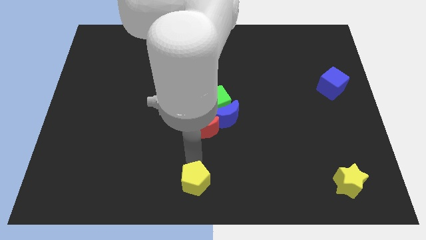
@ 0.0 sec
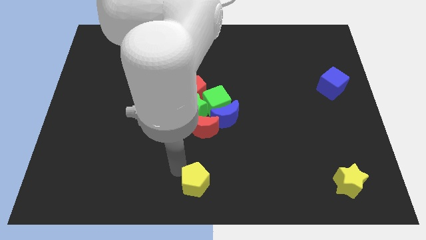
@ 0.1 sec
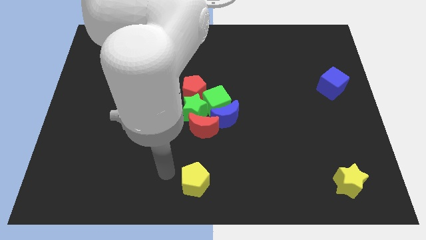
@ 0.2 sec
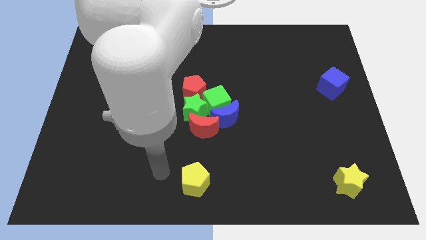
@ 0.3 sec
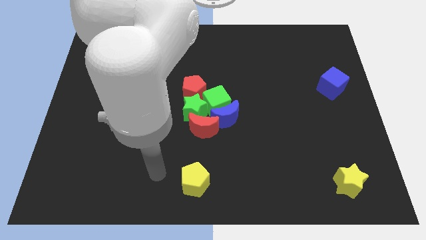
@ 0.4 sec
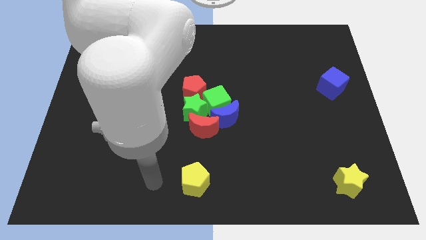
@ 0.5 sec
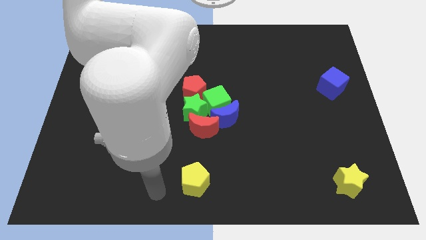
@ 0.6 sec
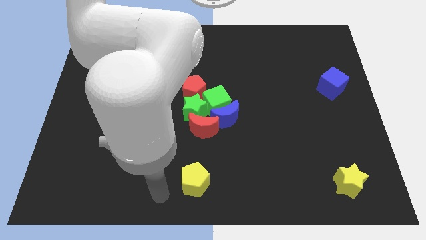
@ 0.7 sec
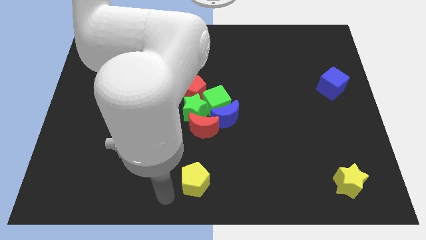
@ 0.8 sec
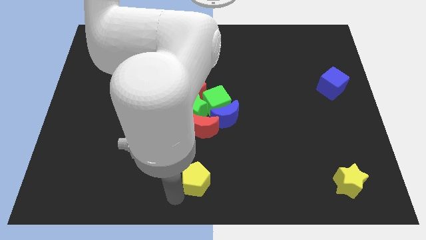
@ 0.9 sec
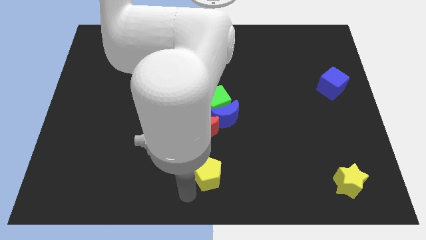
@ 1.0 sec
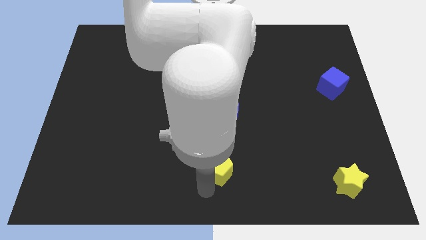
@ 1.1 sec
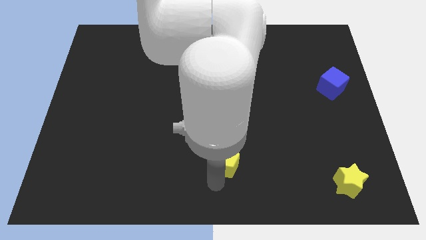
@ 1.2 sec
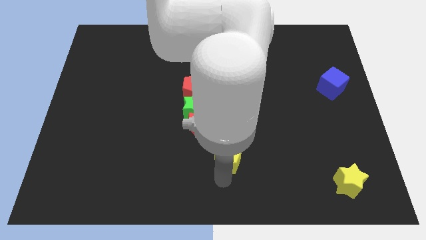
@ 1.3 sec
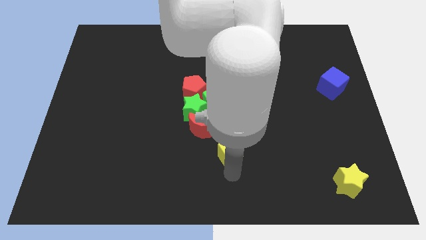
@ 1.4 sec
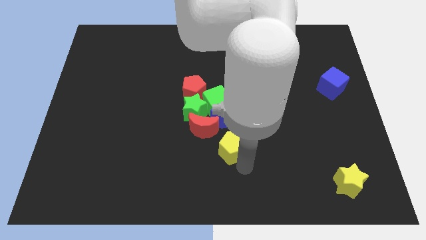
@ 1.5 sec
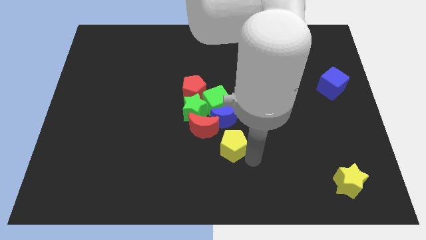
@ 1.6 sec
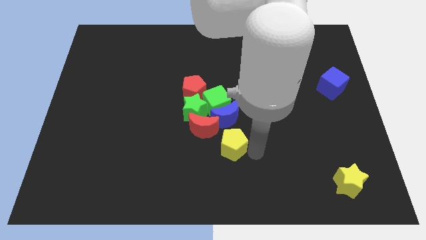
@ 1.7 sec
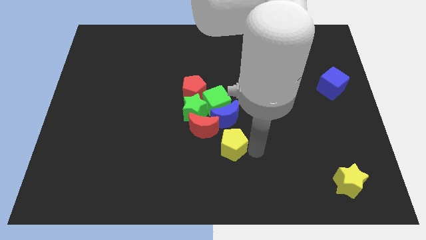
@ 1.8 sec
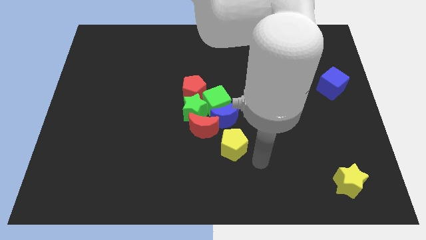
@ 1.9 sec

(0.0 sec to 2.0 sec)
push the yellow pentagon towards red crescent

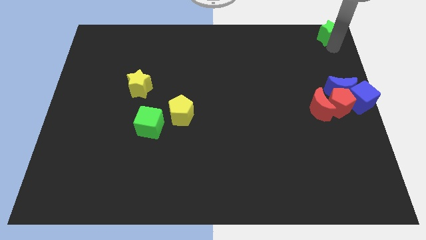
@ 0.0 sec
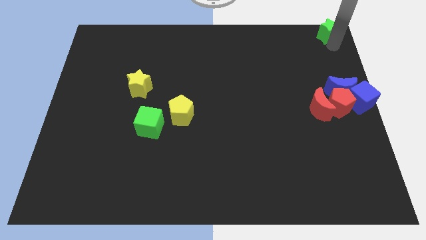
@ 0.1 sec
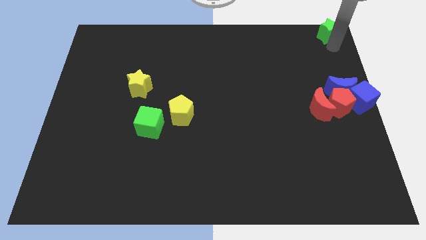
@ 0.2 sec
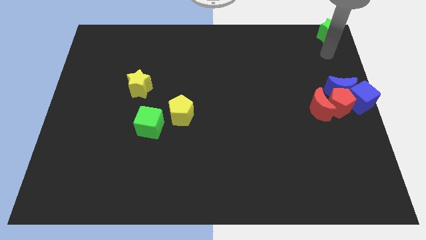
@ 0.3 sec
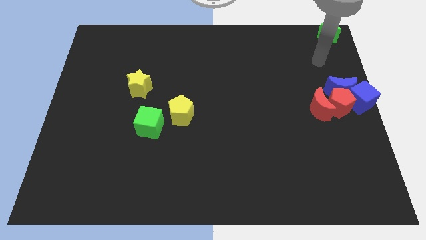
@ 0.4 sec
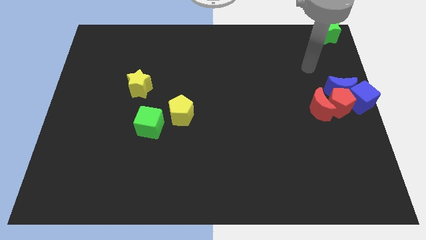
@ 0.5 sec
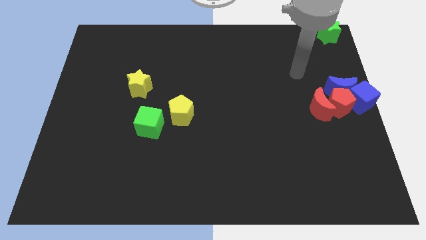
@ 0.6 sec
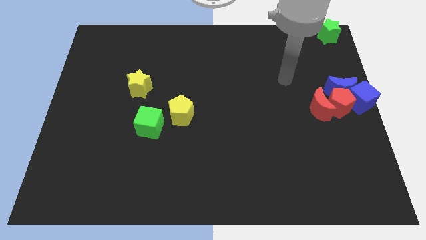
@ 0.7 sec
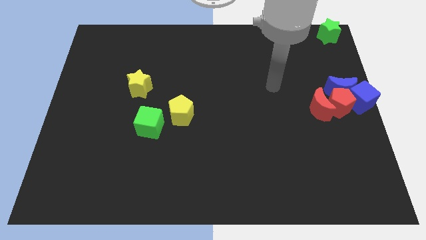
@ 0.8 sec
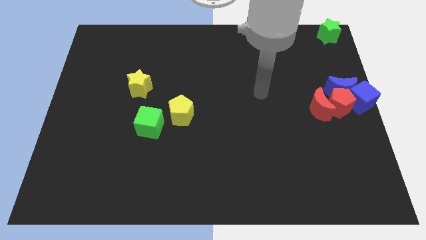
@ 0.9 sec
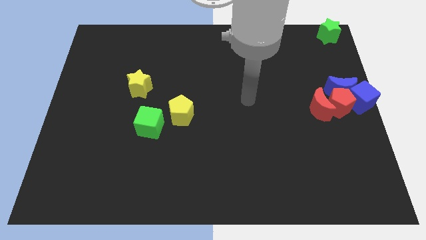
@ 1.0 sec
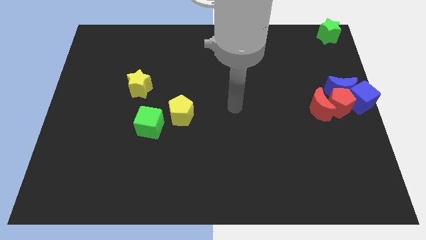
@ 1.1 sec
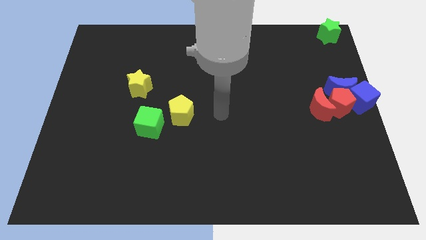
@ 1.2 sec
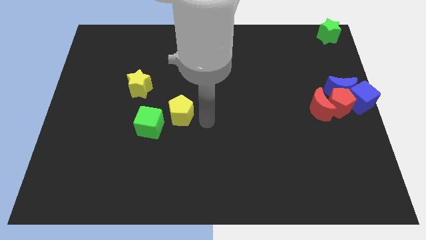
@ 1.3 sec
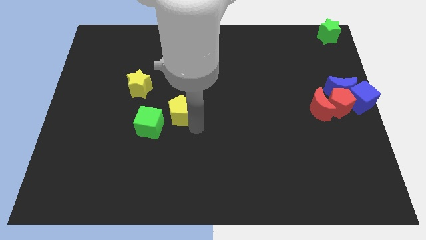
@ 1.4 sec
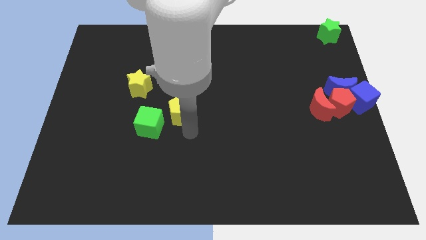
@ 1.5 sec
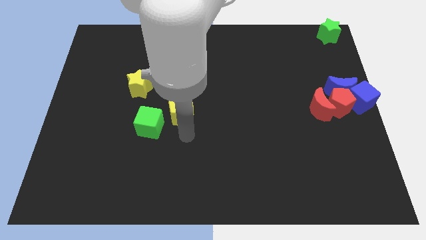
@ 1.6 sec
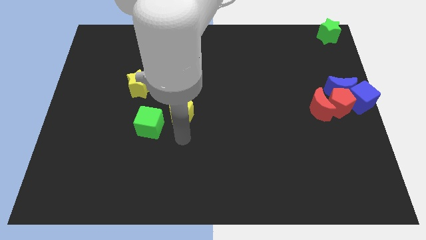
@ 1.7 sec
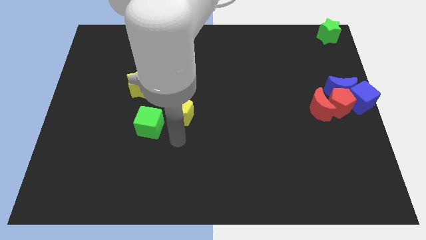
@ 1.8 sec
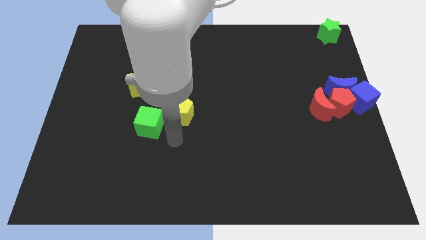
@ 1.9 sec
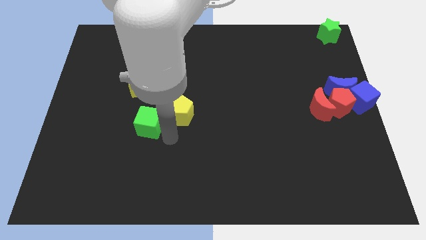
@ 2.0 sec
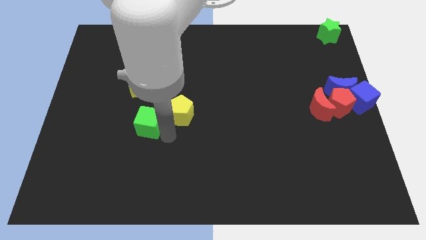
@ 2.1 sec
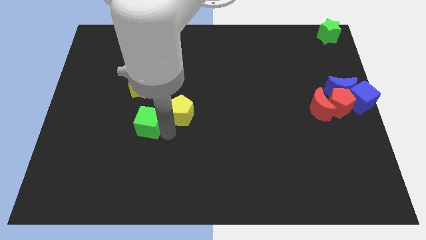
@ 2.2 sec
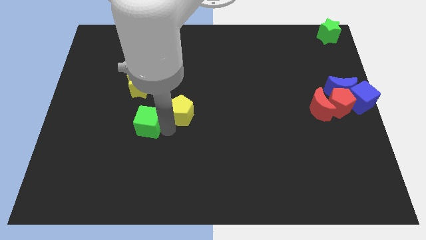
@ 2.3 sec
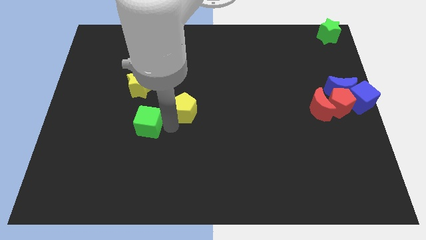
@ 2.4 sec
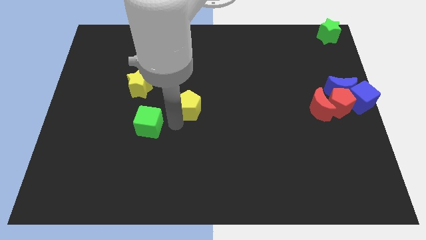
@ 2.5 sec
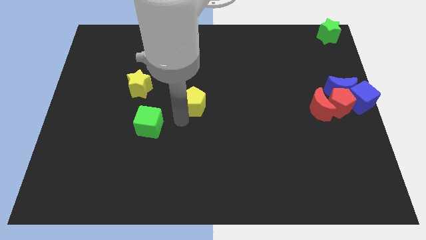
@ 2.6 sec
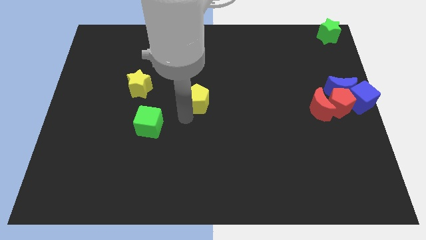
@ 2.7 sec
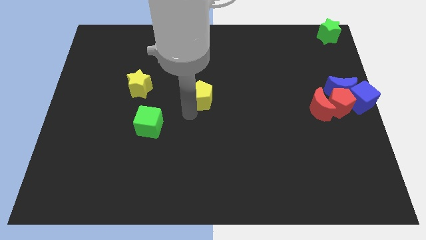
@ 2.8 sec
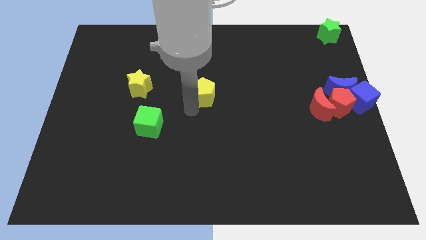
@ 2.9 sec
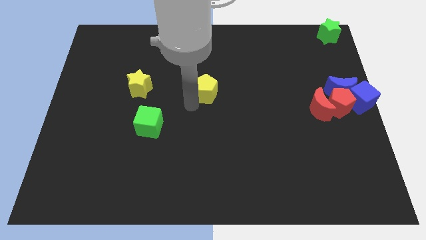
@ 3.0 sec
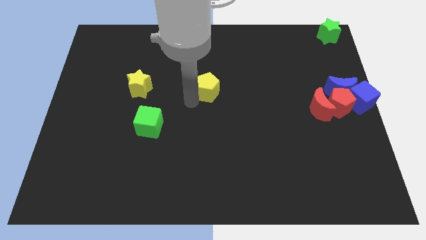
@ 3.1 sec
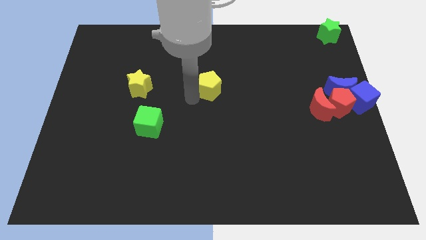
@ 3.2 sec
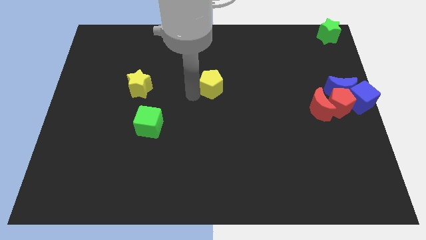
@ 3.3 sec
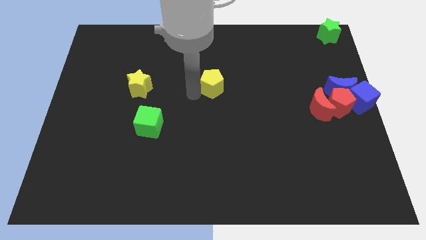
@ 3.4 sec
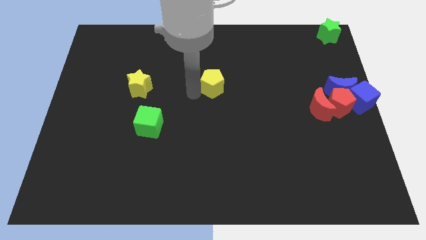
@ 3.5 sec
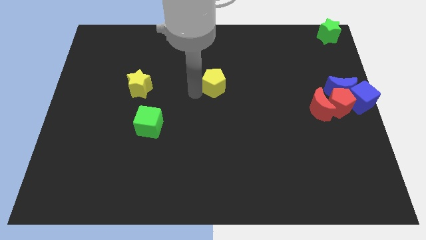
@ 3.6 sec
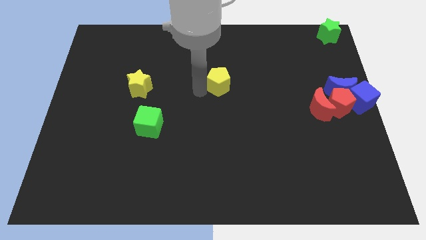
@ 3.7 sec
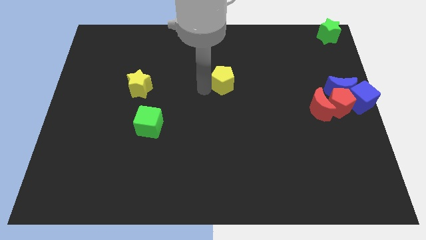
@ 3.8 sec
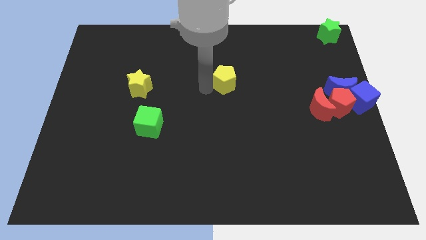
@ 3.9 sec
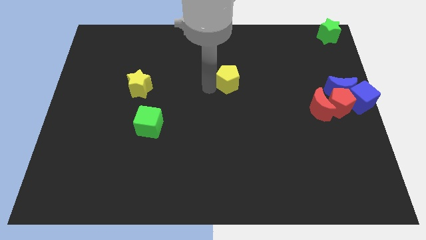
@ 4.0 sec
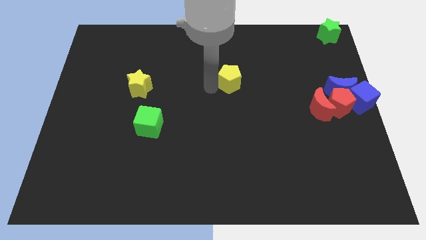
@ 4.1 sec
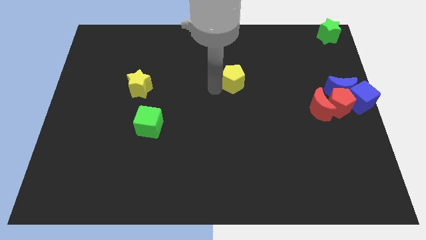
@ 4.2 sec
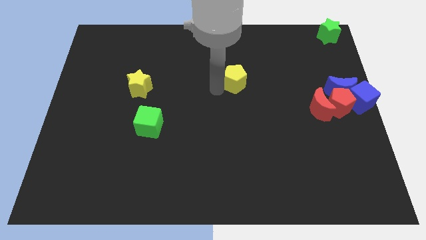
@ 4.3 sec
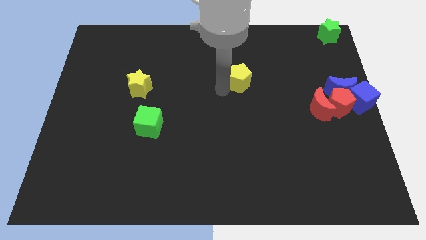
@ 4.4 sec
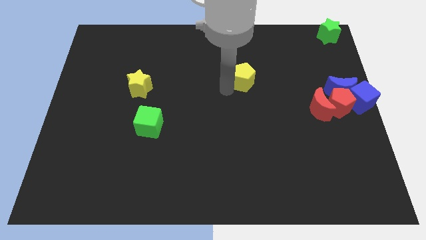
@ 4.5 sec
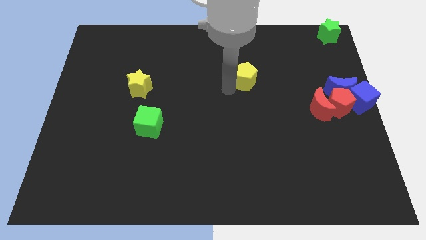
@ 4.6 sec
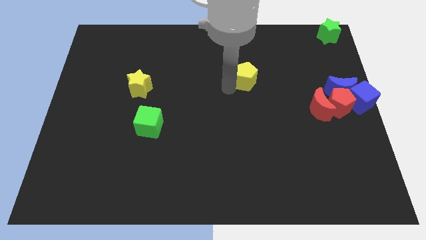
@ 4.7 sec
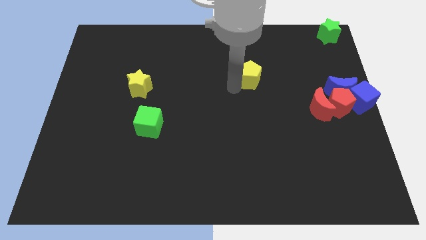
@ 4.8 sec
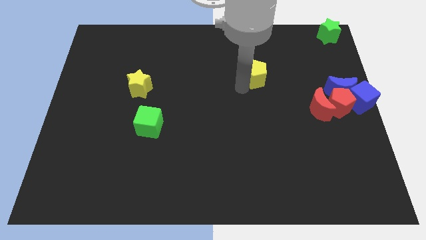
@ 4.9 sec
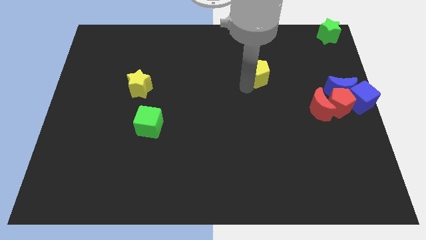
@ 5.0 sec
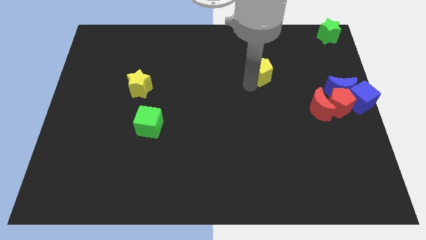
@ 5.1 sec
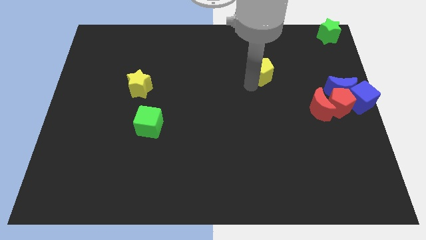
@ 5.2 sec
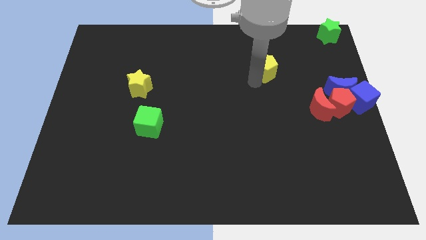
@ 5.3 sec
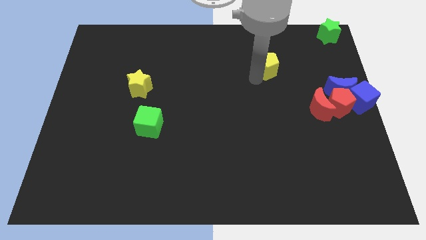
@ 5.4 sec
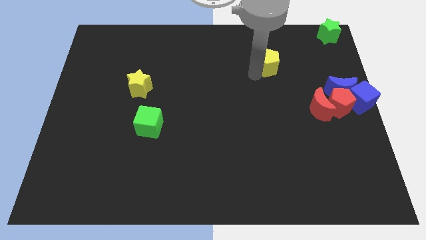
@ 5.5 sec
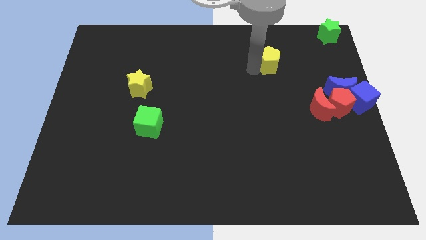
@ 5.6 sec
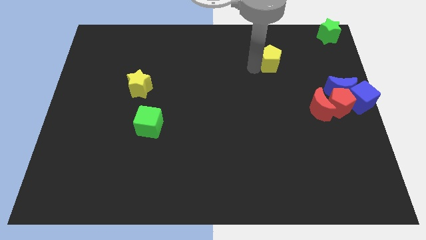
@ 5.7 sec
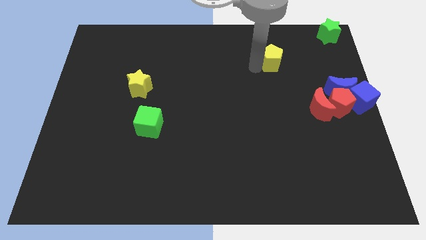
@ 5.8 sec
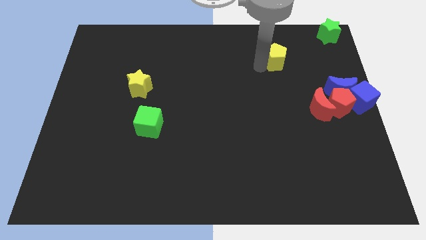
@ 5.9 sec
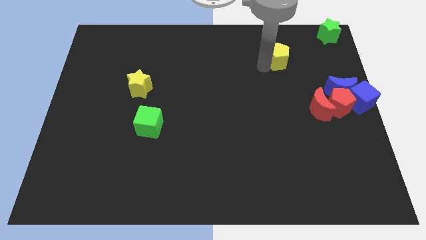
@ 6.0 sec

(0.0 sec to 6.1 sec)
move the yellow pentagon towards the top right of the board

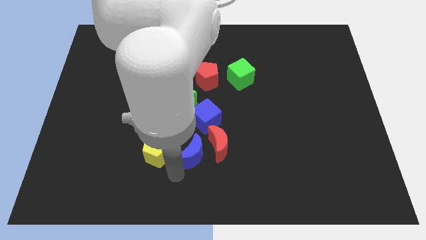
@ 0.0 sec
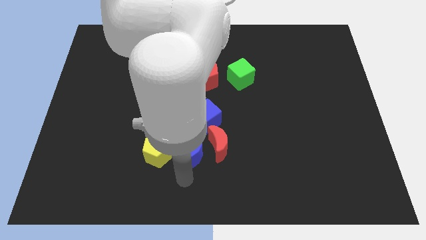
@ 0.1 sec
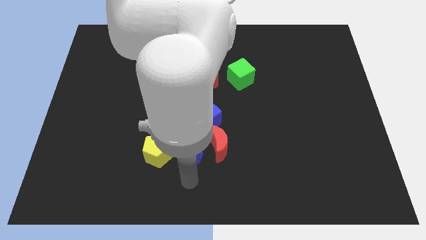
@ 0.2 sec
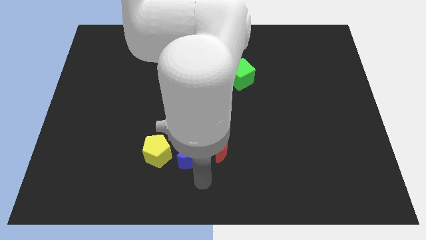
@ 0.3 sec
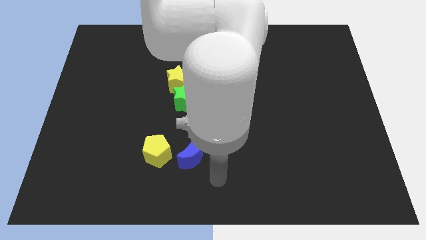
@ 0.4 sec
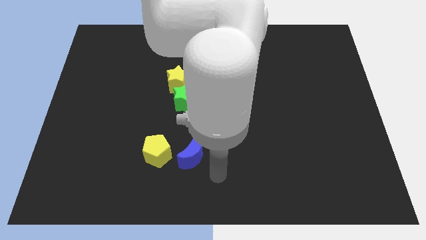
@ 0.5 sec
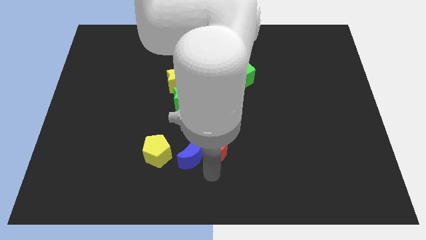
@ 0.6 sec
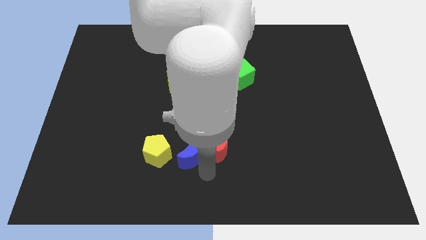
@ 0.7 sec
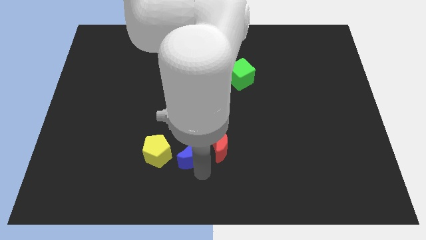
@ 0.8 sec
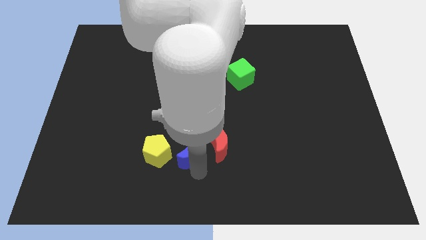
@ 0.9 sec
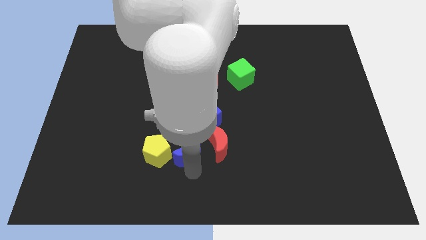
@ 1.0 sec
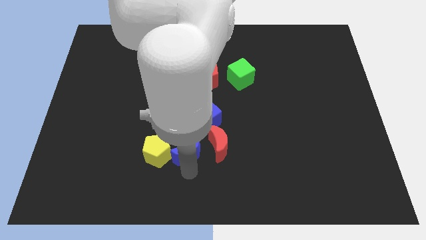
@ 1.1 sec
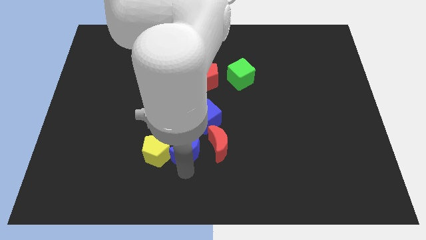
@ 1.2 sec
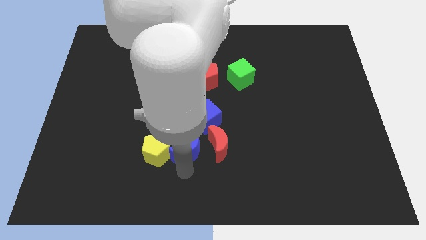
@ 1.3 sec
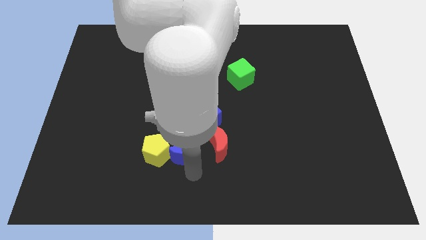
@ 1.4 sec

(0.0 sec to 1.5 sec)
place the blue moon right to the yellow pentagon
